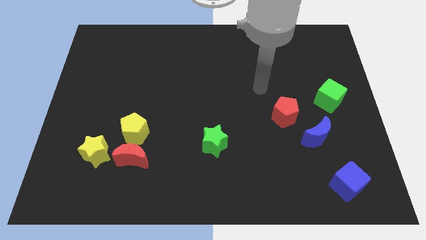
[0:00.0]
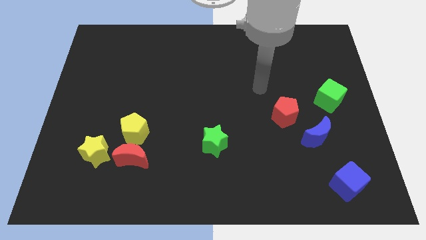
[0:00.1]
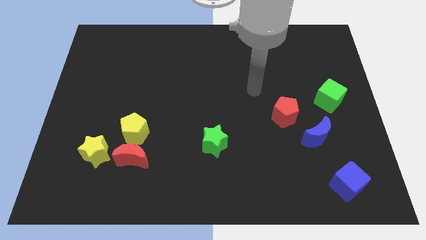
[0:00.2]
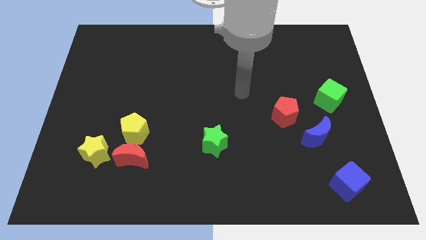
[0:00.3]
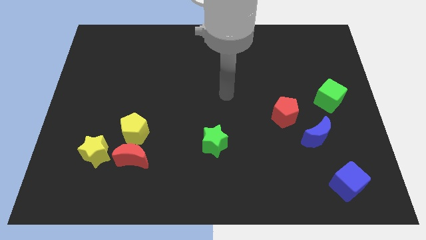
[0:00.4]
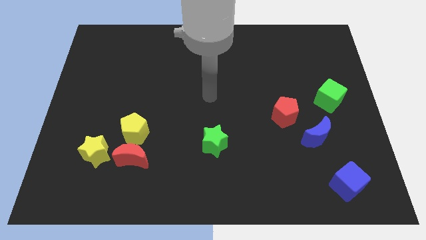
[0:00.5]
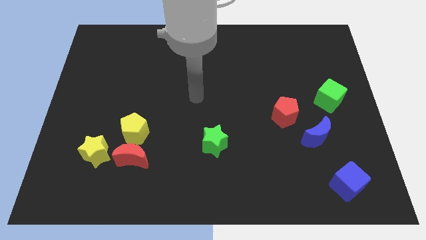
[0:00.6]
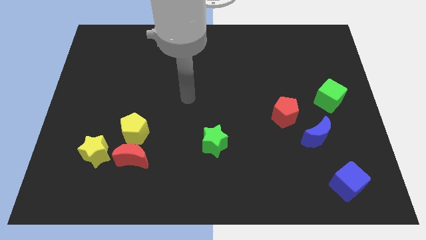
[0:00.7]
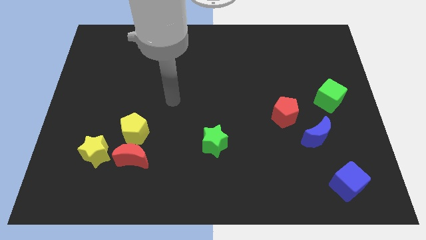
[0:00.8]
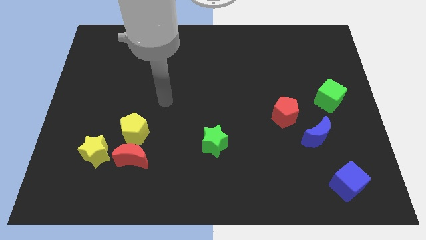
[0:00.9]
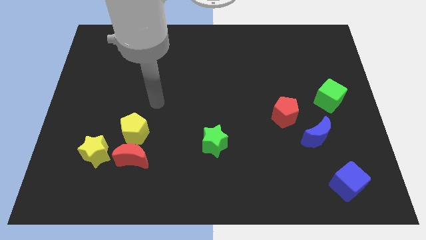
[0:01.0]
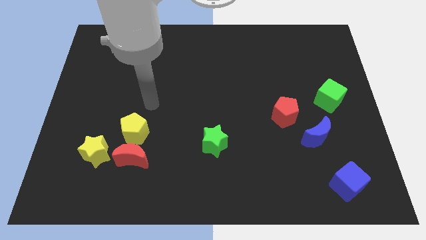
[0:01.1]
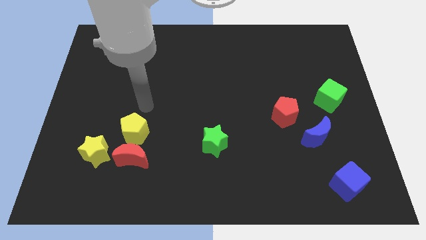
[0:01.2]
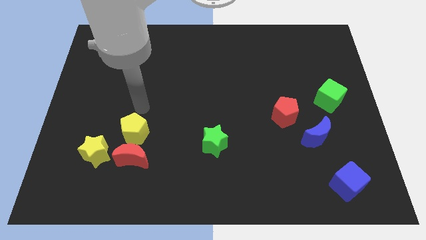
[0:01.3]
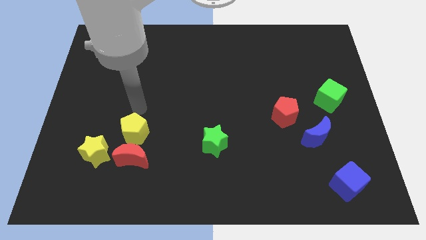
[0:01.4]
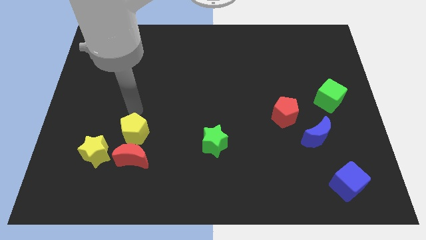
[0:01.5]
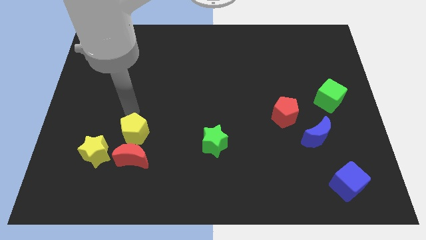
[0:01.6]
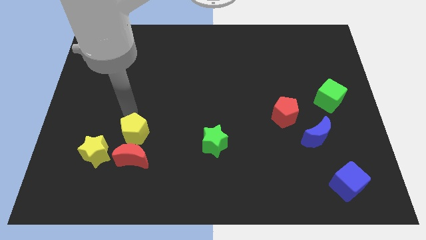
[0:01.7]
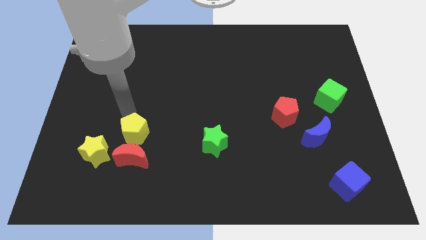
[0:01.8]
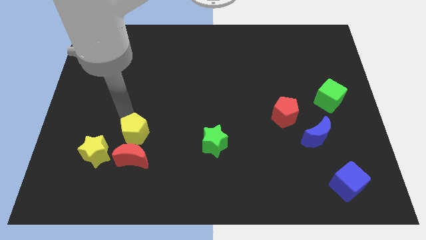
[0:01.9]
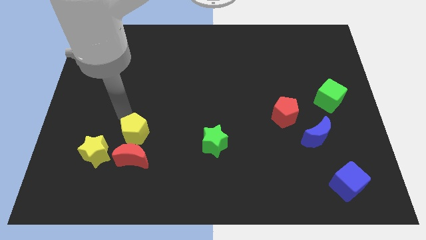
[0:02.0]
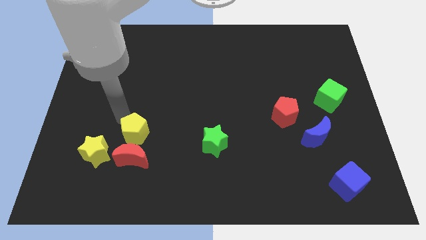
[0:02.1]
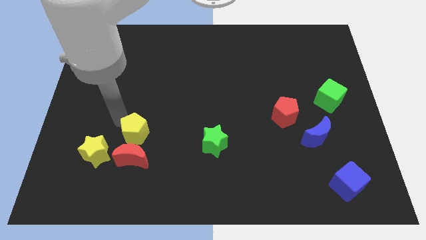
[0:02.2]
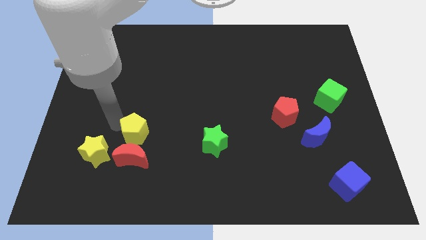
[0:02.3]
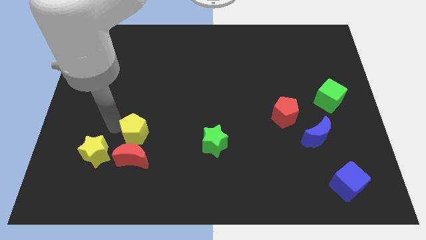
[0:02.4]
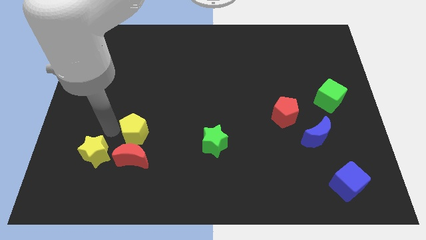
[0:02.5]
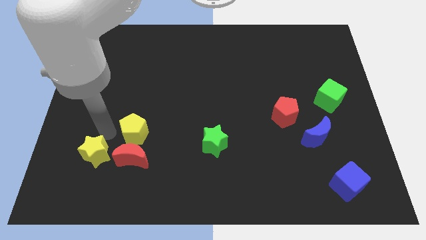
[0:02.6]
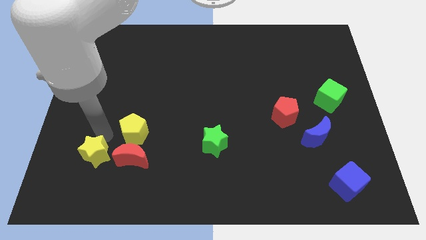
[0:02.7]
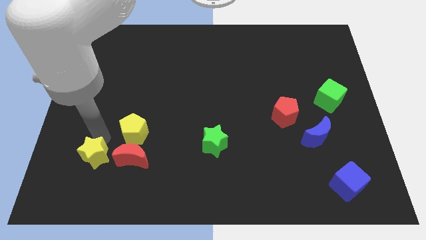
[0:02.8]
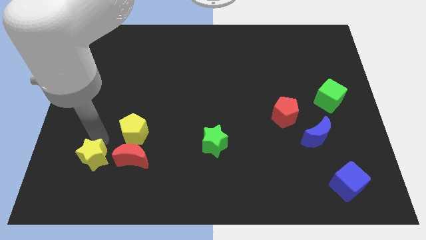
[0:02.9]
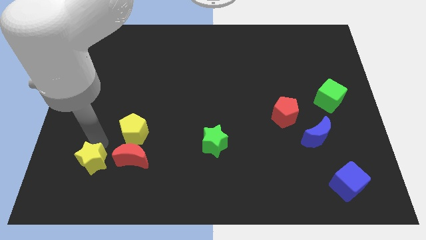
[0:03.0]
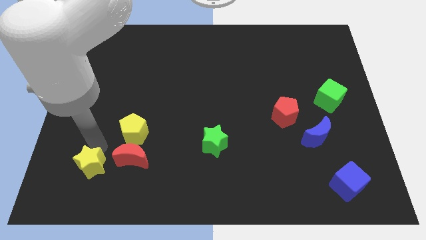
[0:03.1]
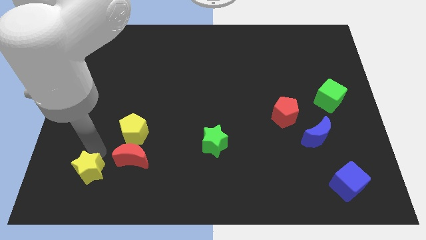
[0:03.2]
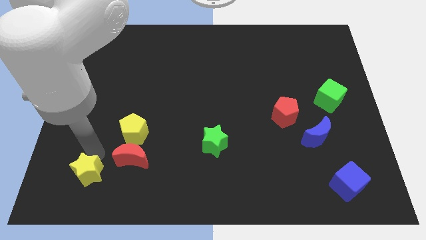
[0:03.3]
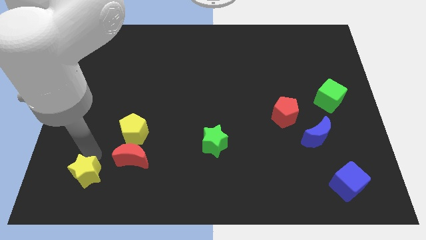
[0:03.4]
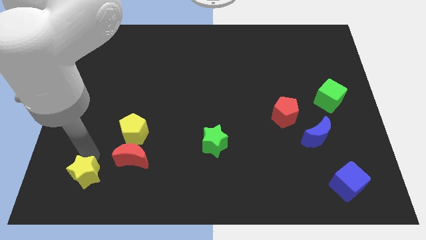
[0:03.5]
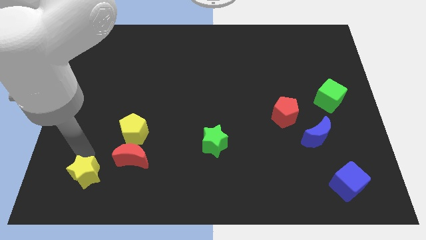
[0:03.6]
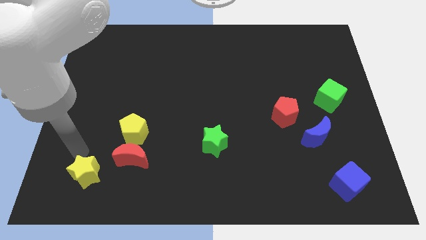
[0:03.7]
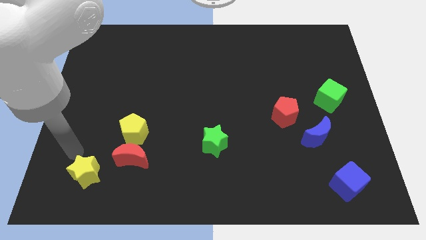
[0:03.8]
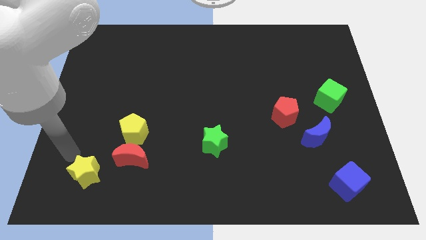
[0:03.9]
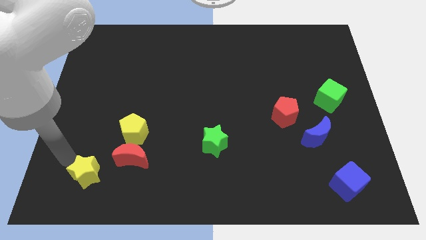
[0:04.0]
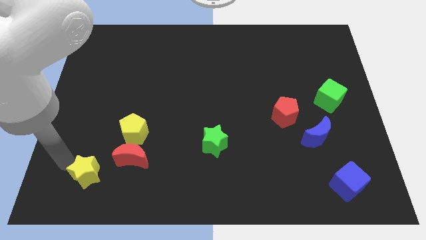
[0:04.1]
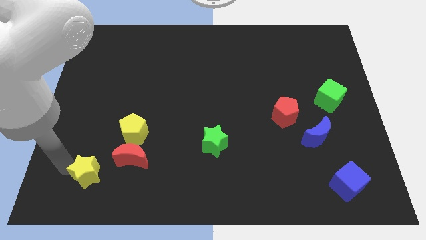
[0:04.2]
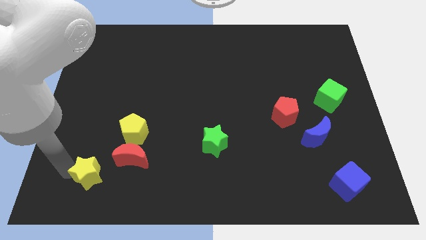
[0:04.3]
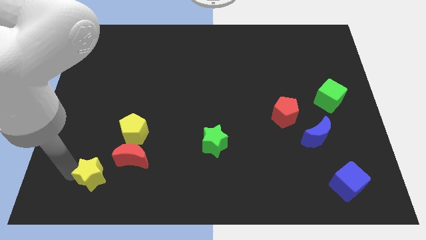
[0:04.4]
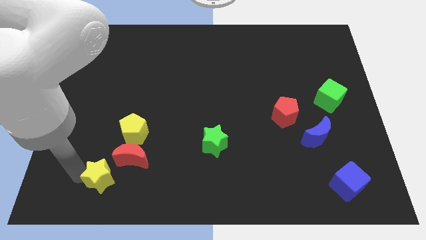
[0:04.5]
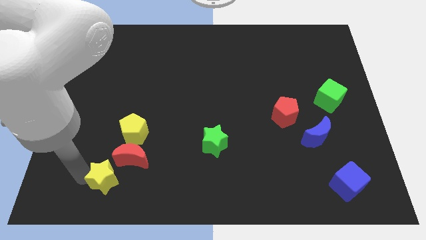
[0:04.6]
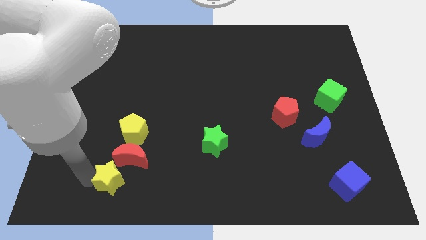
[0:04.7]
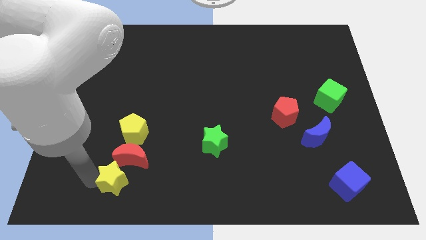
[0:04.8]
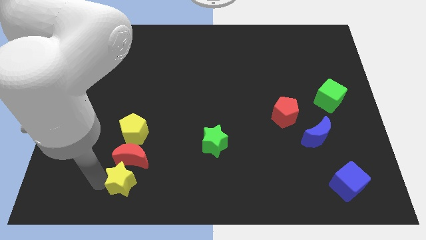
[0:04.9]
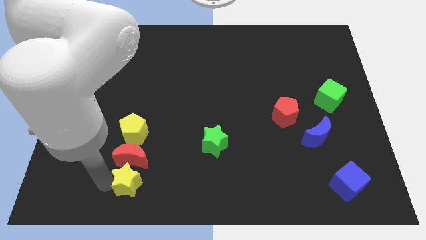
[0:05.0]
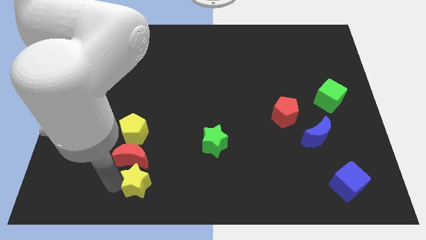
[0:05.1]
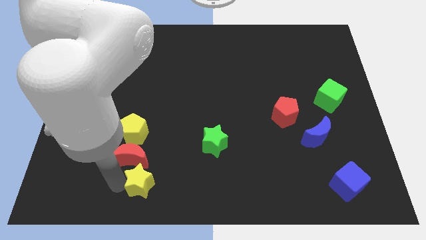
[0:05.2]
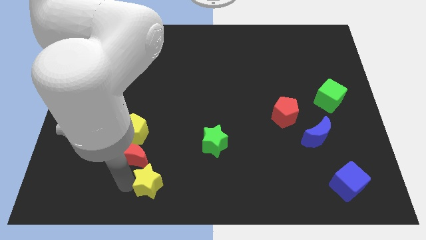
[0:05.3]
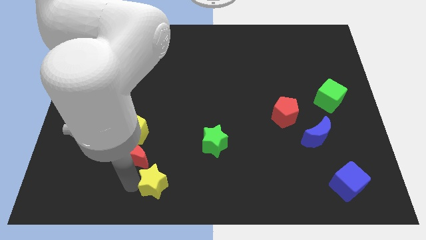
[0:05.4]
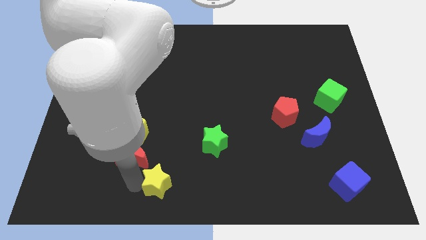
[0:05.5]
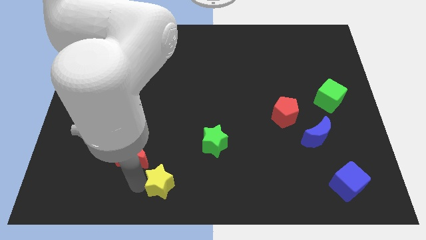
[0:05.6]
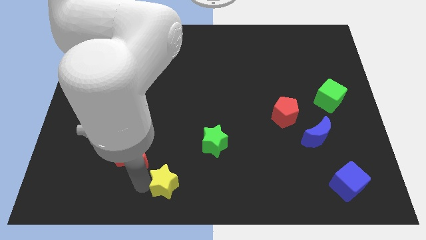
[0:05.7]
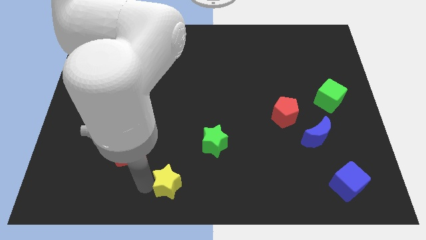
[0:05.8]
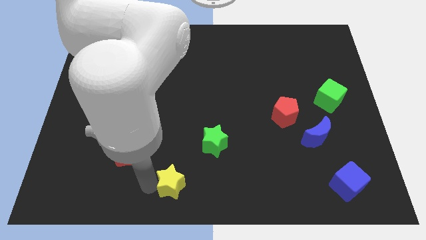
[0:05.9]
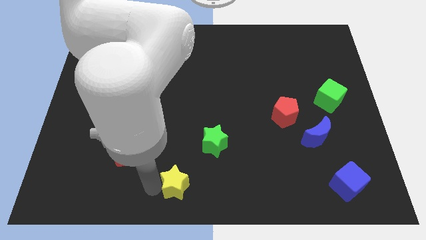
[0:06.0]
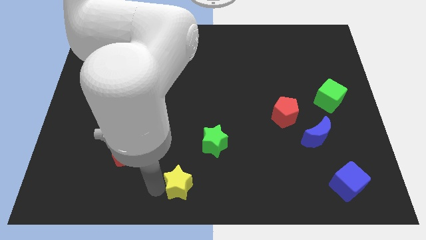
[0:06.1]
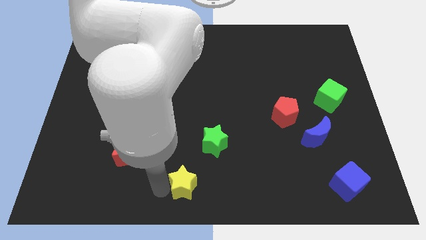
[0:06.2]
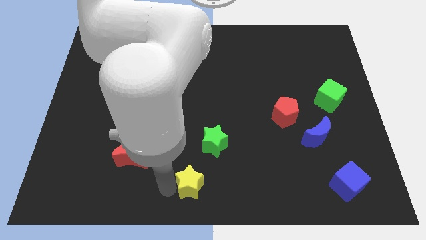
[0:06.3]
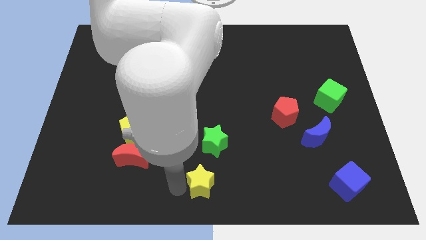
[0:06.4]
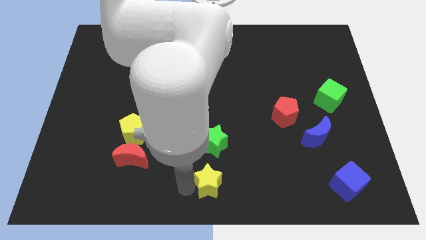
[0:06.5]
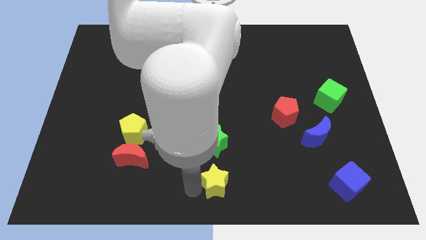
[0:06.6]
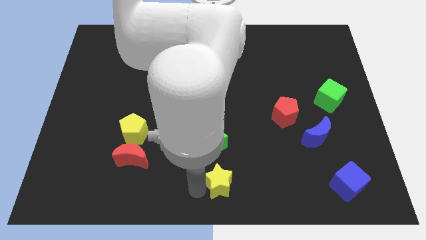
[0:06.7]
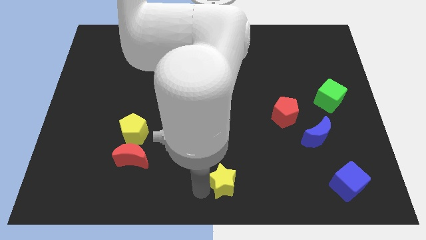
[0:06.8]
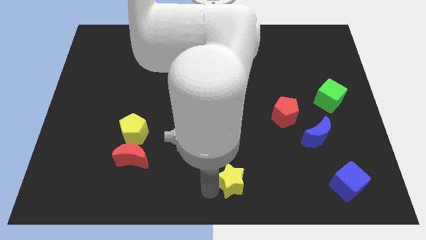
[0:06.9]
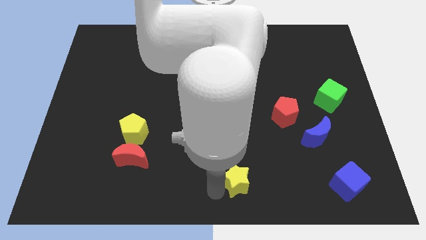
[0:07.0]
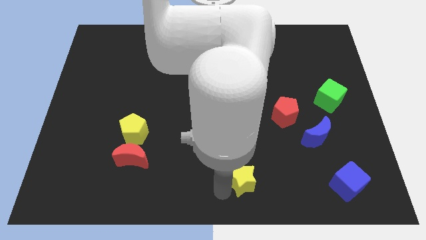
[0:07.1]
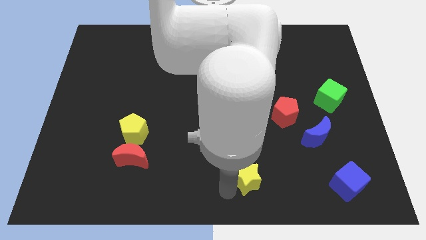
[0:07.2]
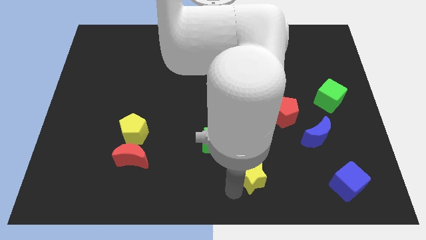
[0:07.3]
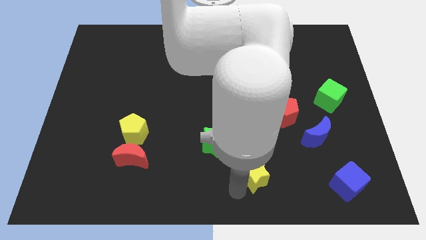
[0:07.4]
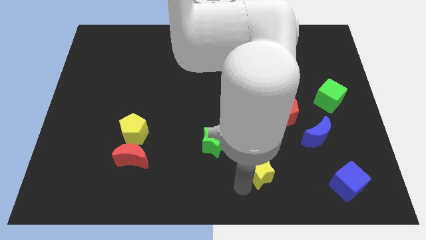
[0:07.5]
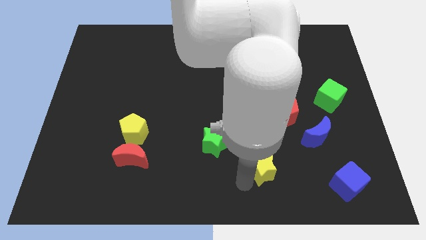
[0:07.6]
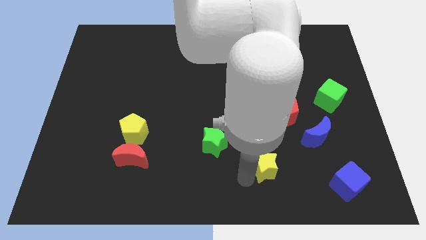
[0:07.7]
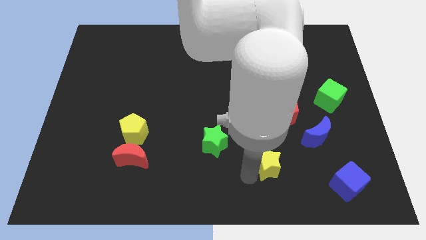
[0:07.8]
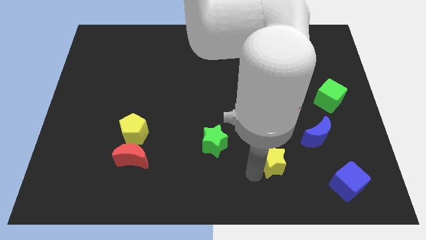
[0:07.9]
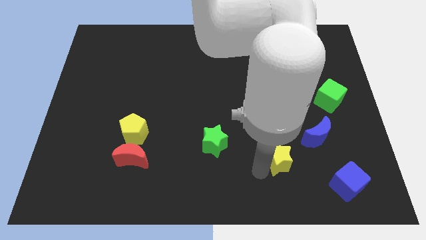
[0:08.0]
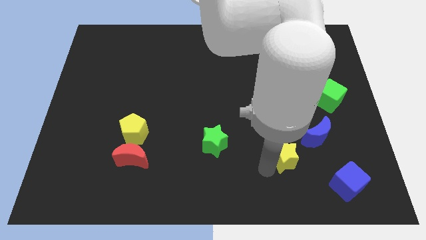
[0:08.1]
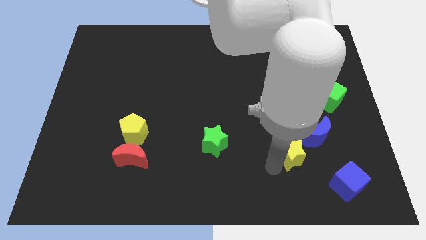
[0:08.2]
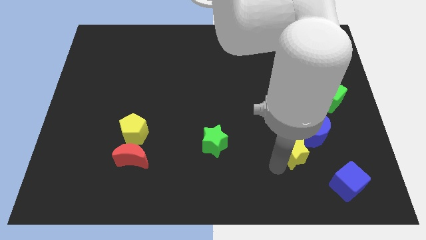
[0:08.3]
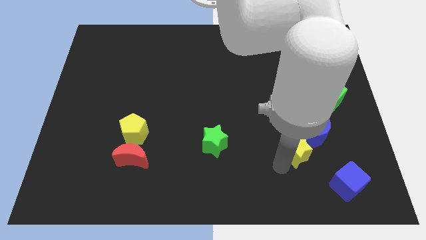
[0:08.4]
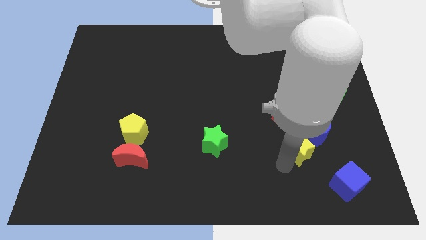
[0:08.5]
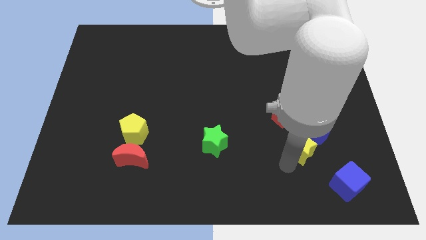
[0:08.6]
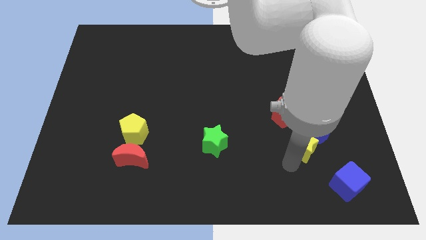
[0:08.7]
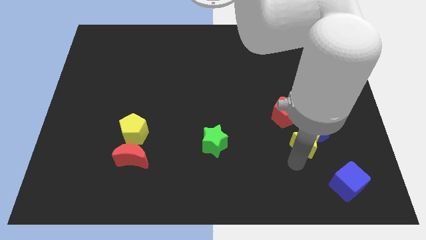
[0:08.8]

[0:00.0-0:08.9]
push the yellow star next to the blue moon
